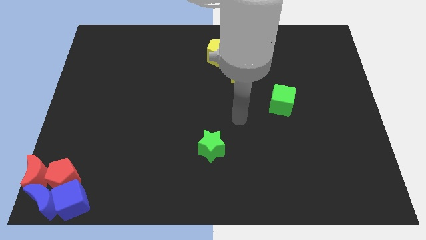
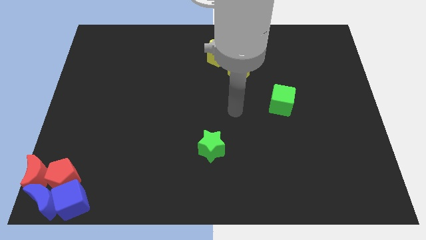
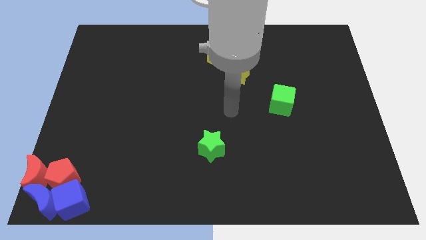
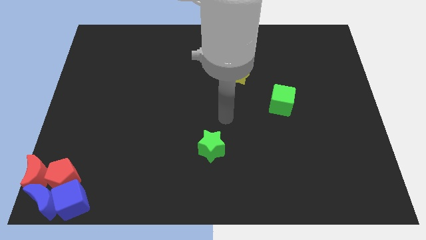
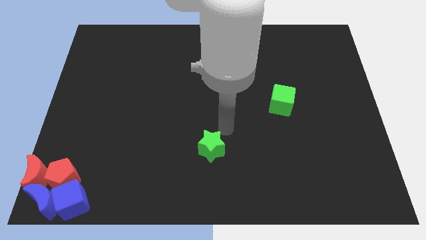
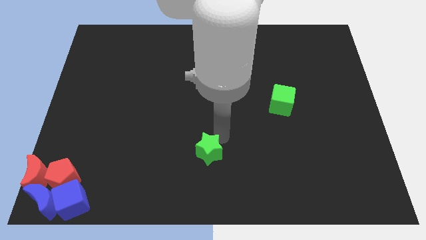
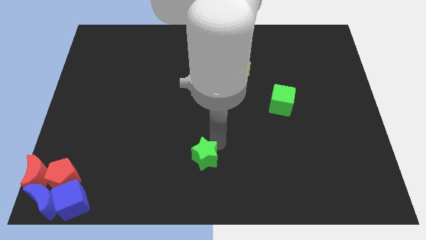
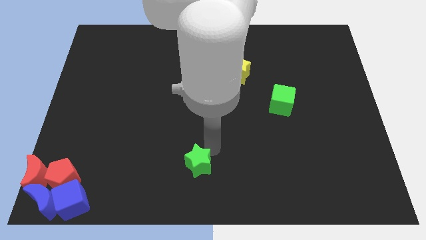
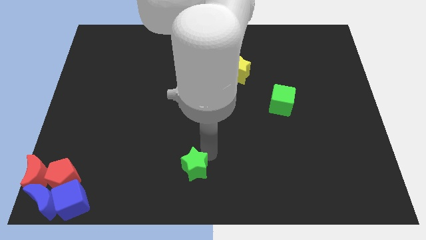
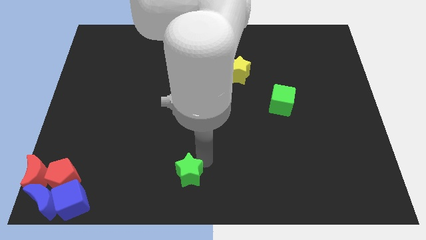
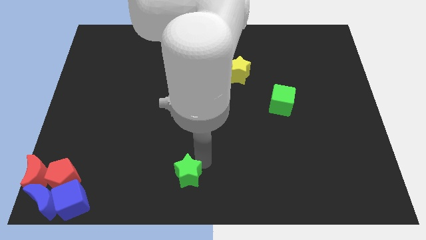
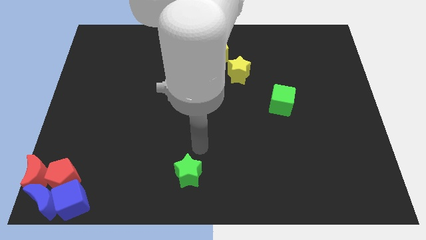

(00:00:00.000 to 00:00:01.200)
push the green star towards the bottom center of the board

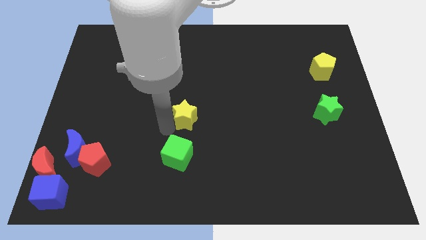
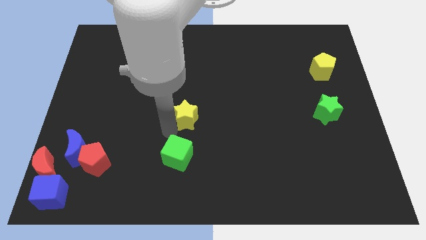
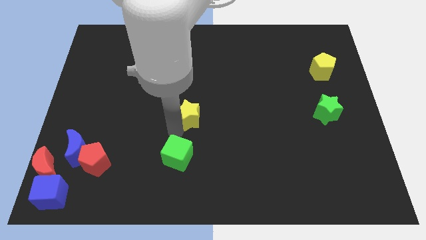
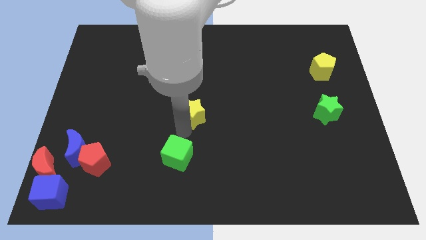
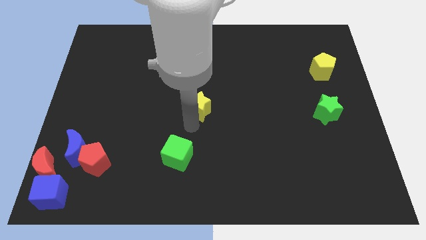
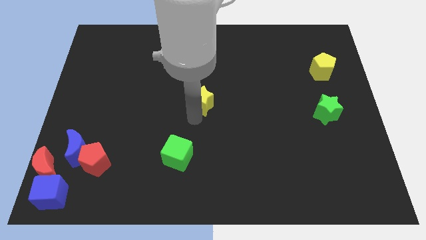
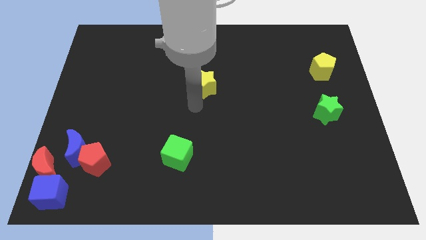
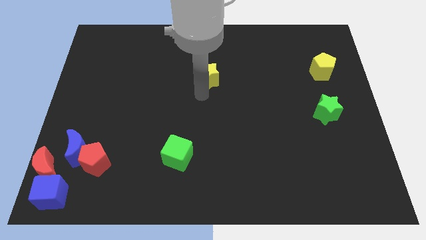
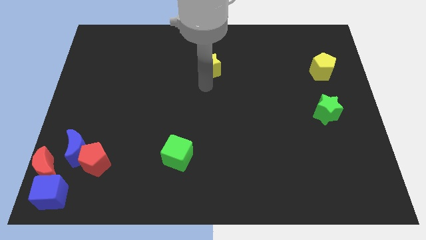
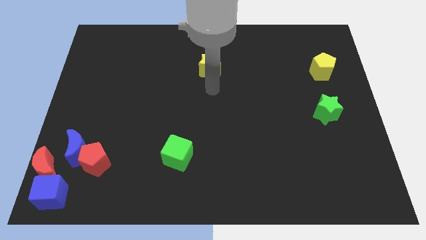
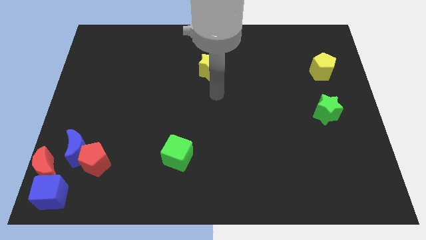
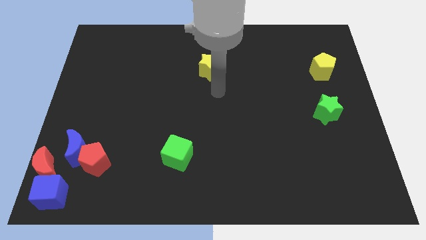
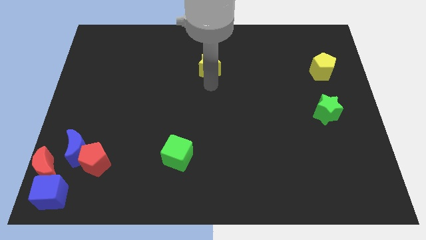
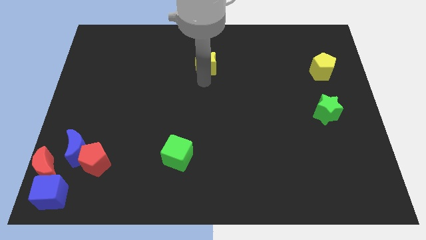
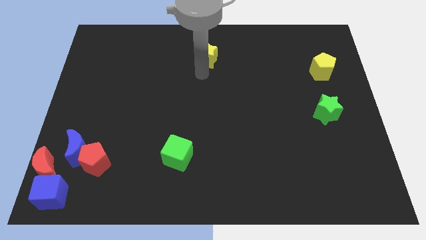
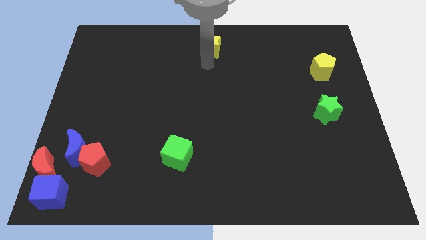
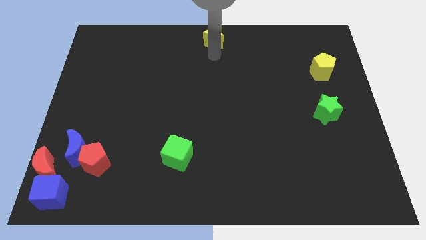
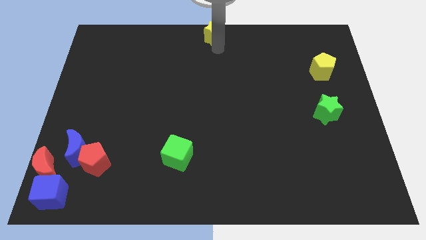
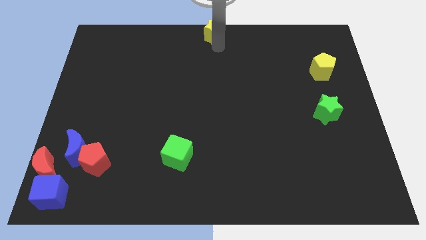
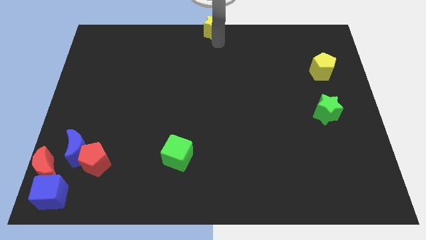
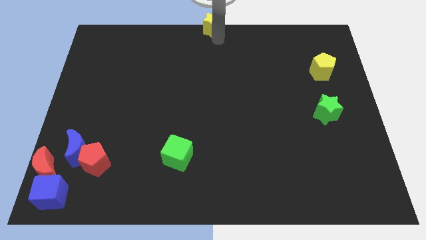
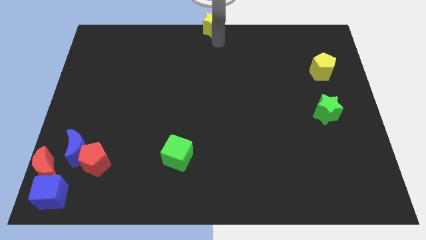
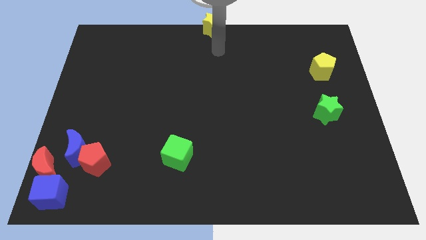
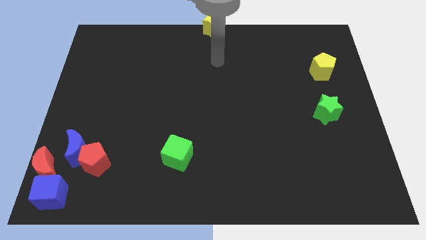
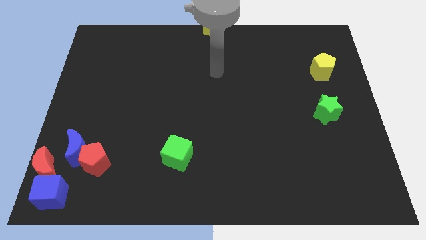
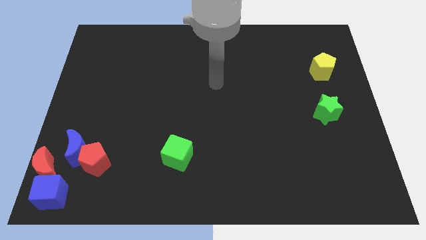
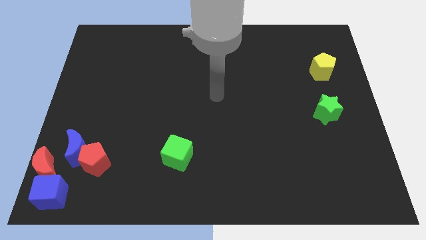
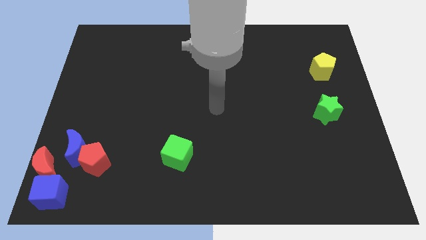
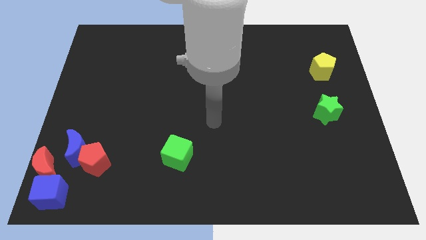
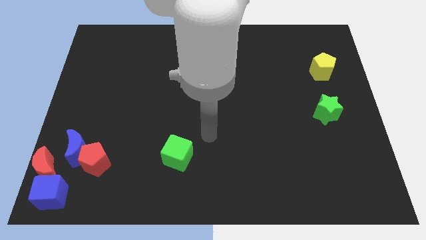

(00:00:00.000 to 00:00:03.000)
push the yellow star to the top center

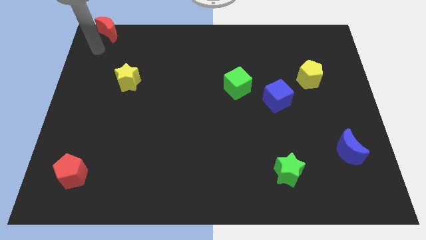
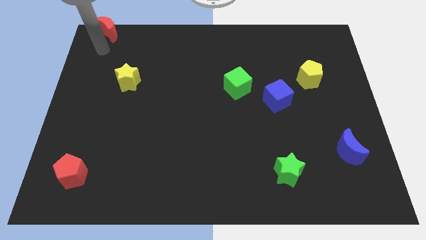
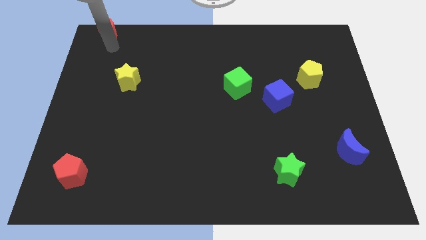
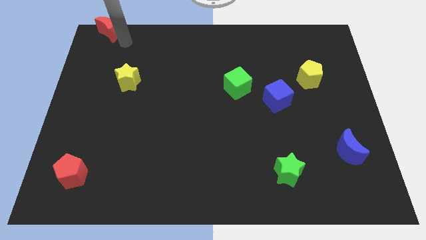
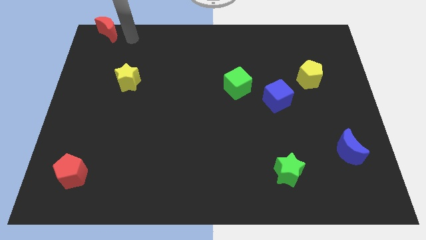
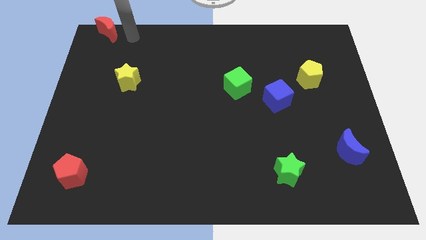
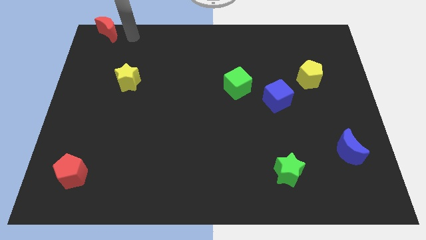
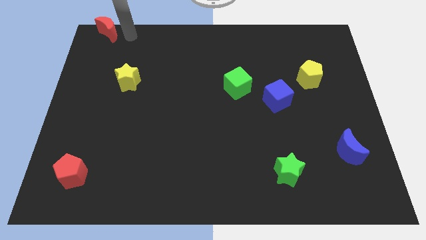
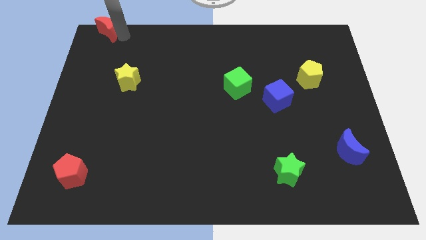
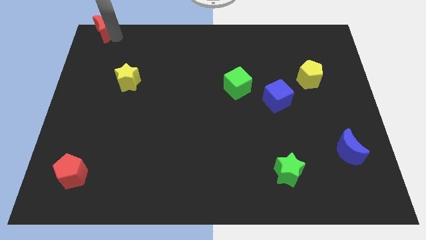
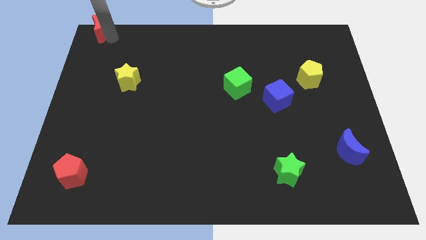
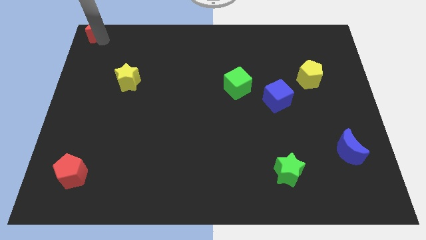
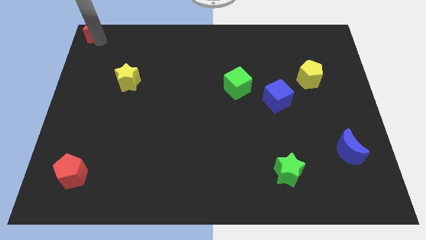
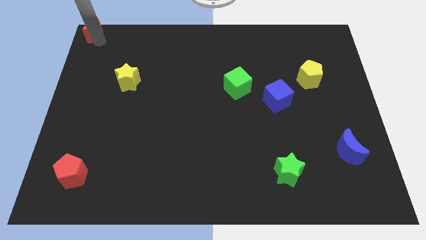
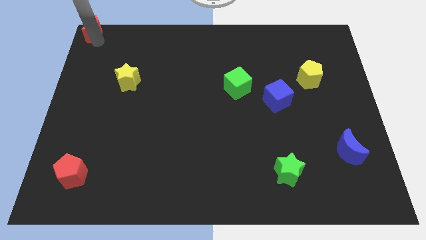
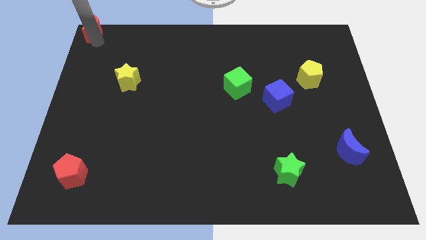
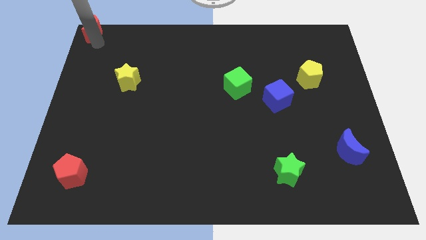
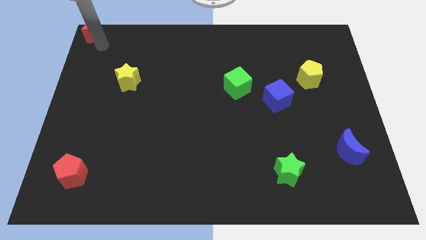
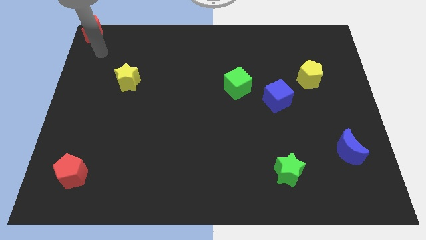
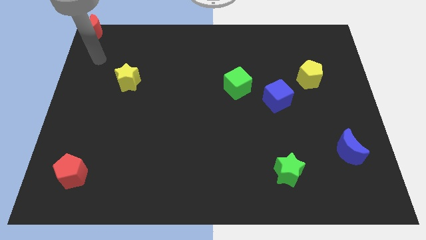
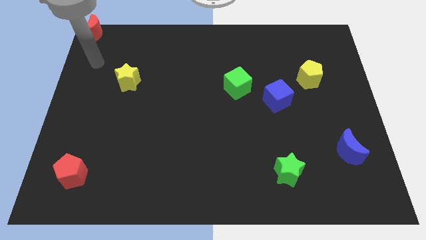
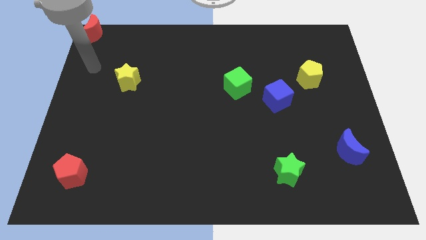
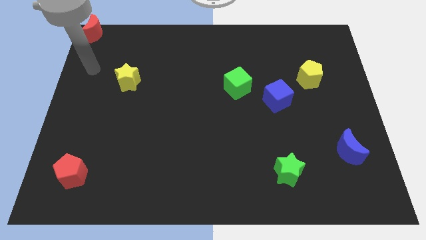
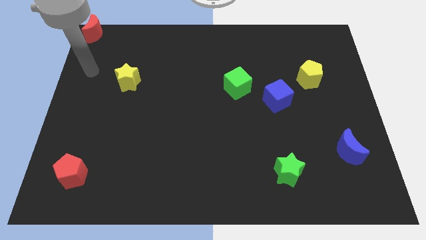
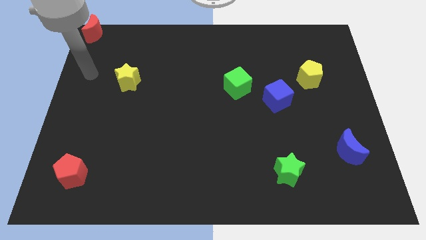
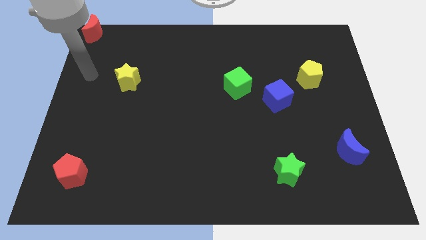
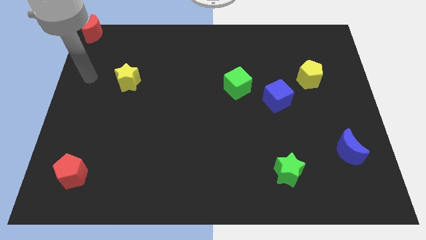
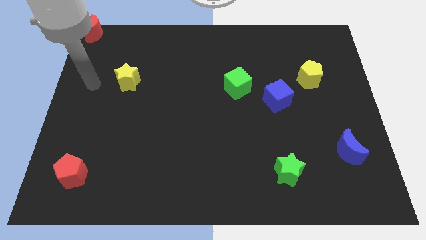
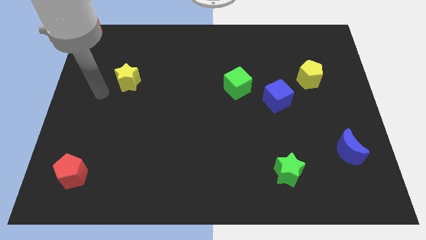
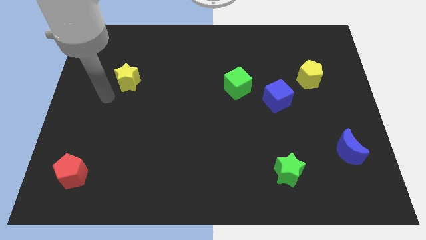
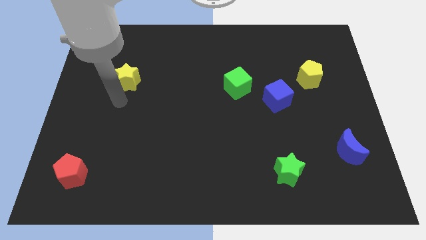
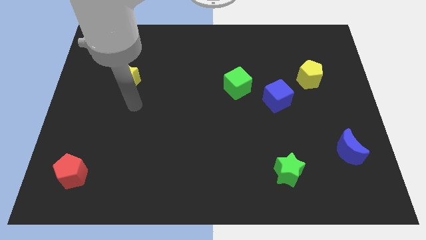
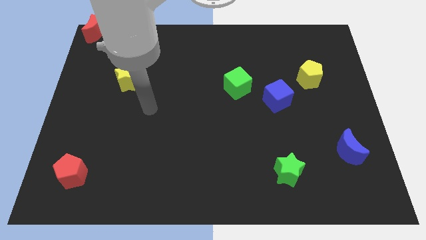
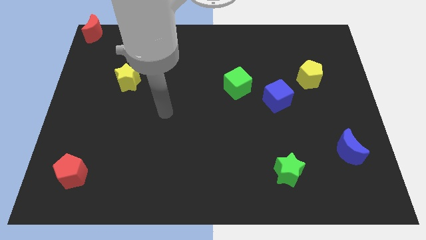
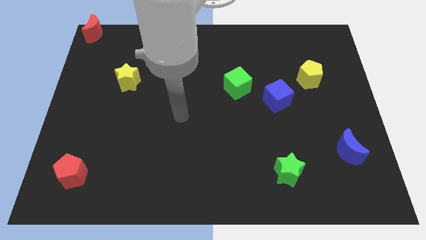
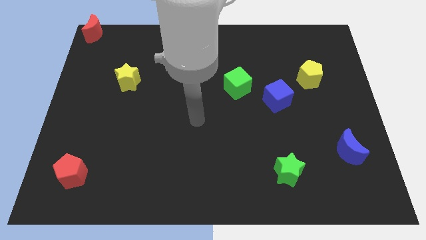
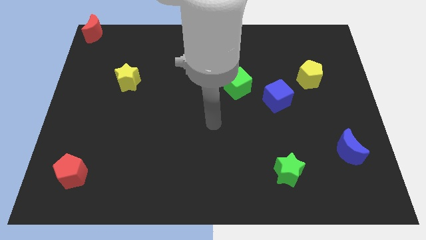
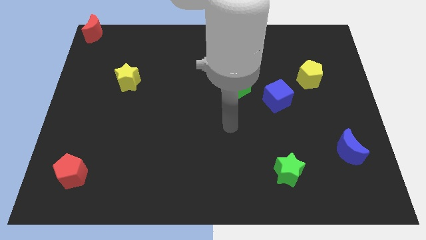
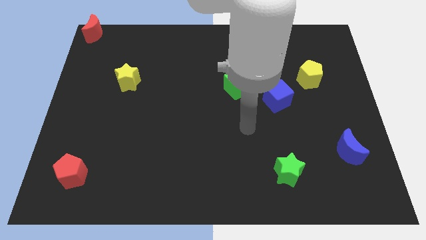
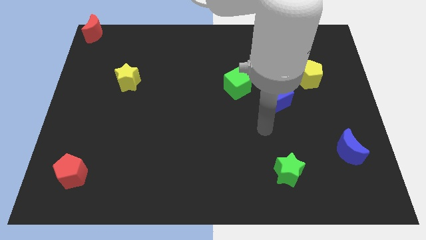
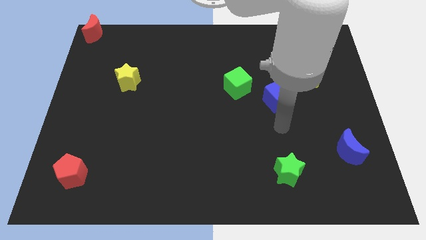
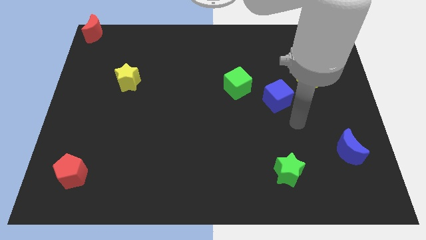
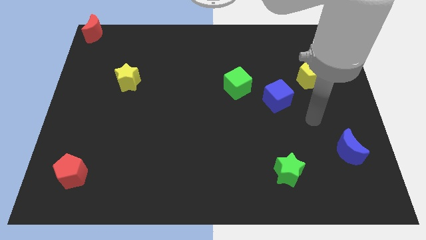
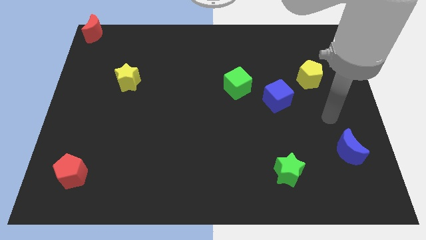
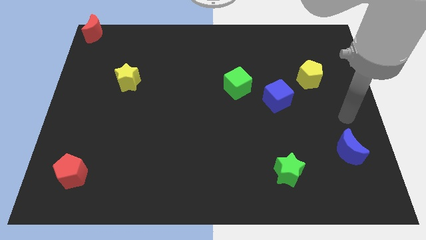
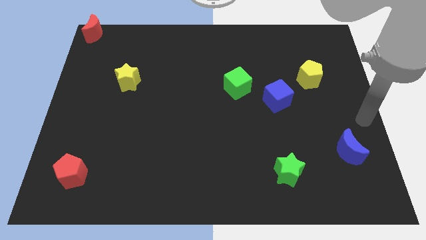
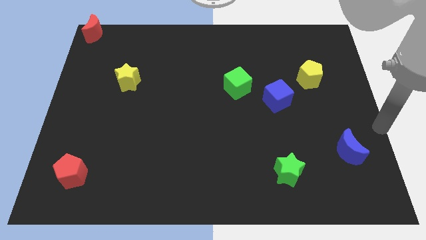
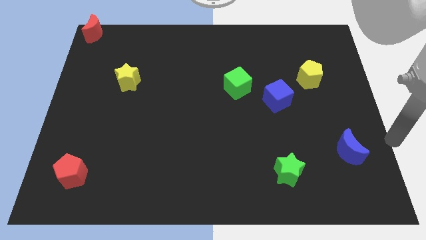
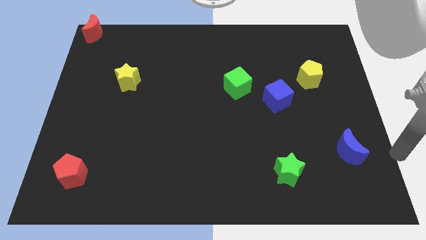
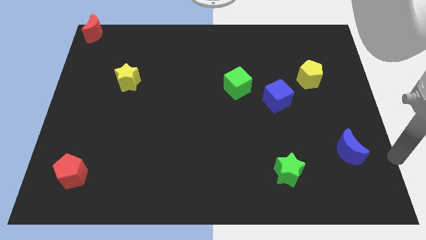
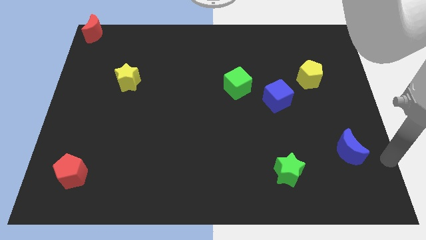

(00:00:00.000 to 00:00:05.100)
place the arm at the right side of the blue moon
